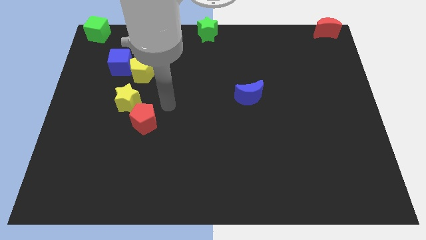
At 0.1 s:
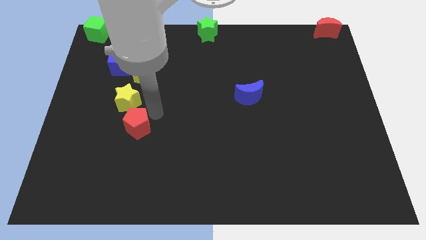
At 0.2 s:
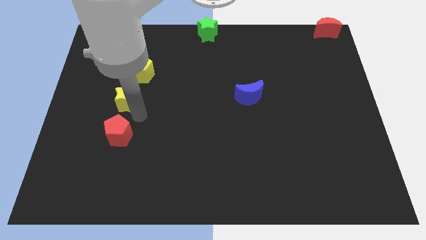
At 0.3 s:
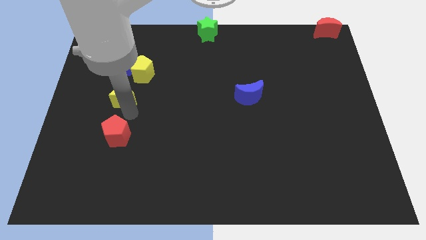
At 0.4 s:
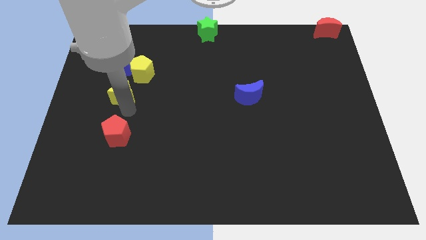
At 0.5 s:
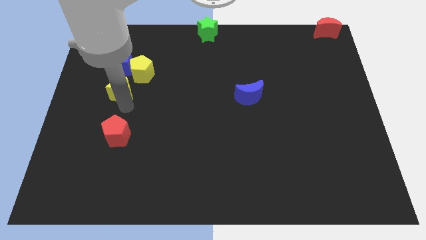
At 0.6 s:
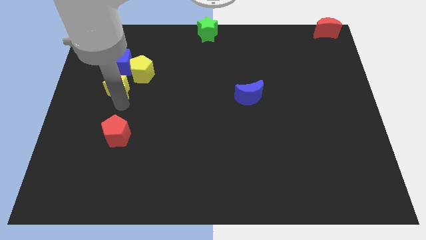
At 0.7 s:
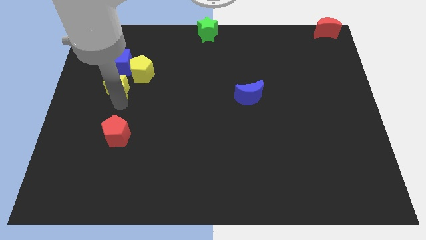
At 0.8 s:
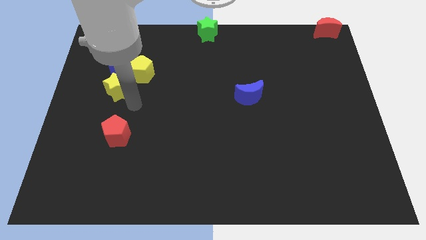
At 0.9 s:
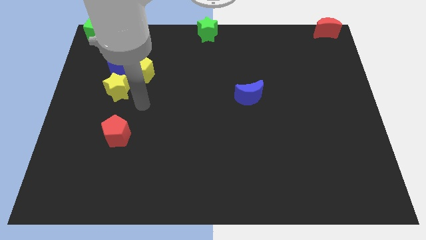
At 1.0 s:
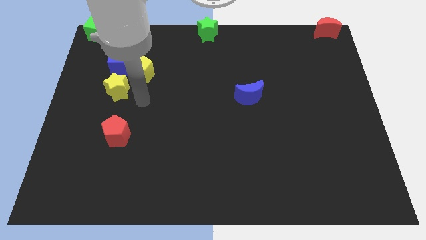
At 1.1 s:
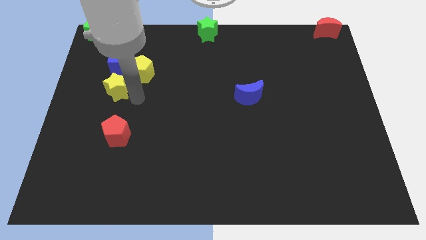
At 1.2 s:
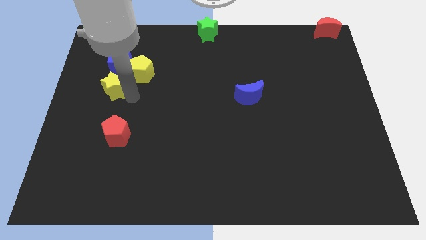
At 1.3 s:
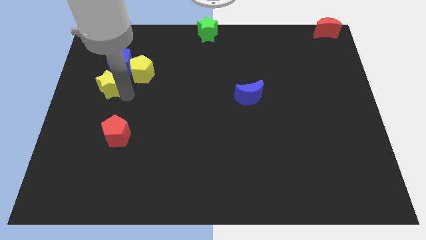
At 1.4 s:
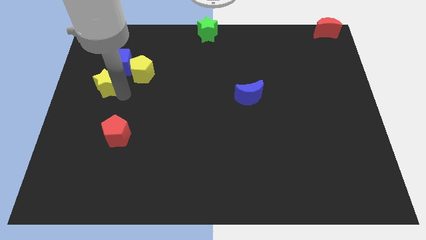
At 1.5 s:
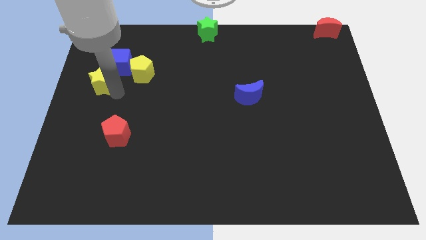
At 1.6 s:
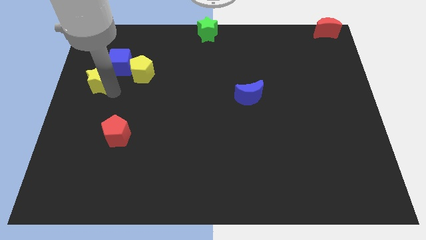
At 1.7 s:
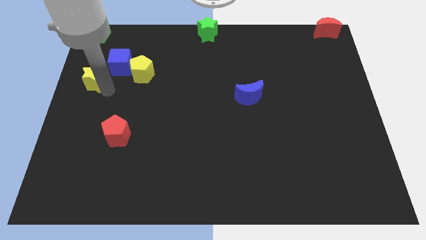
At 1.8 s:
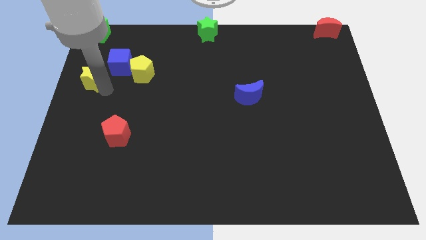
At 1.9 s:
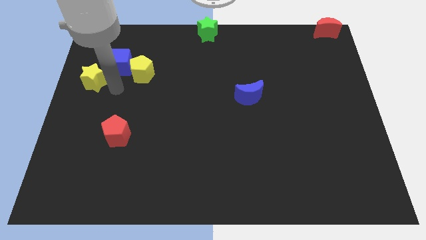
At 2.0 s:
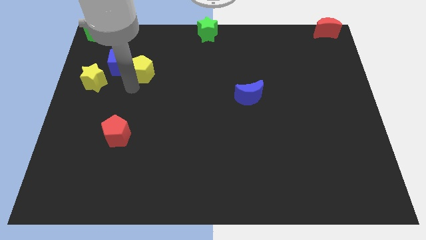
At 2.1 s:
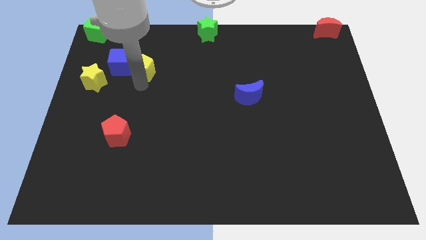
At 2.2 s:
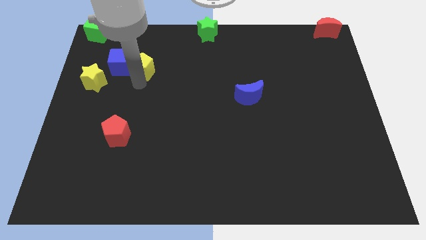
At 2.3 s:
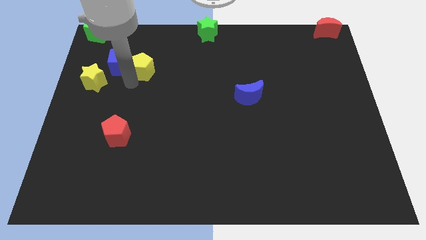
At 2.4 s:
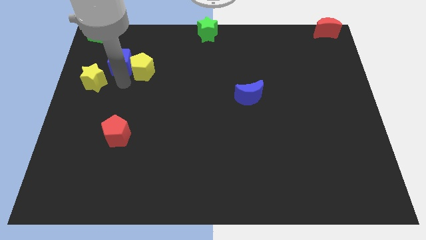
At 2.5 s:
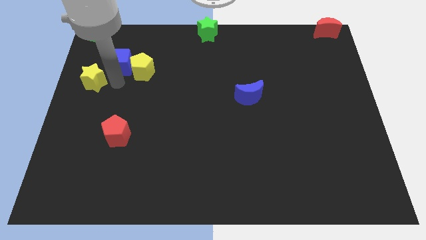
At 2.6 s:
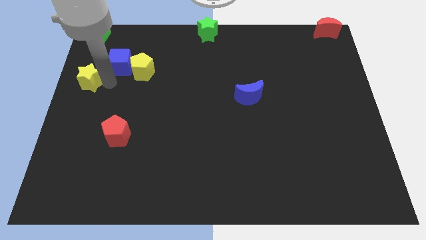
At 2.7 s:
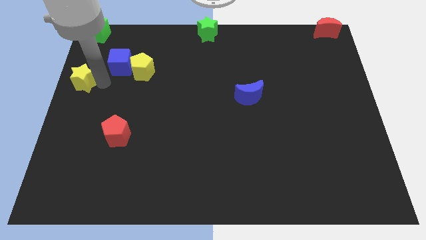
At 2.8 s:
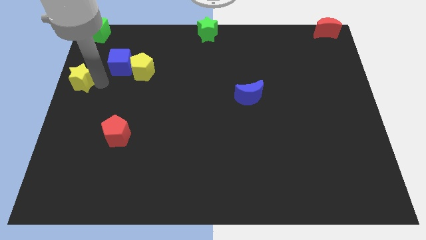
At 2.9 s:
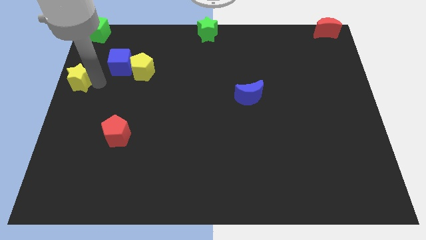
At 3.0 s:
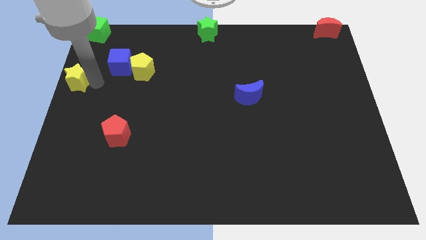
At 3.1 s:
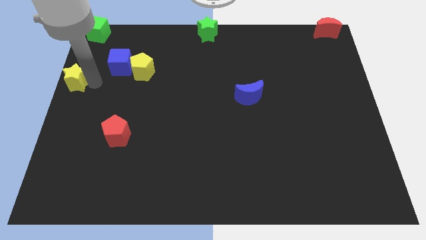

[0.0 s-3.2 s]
place yellow star below green cube

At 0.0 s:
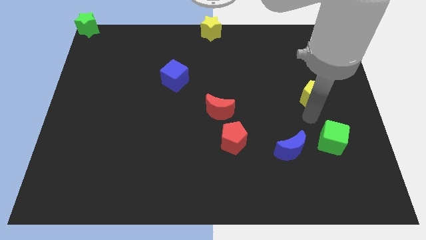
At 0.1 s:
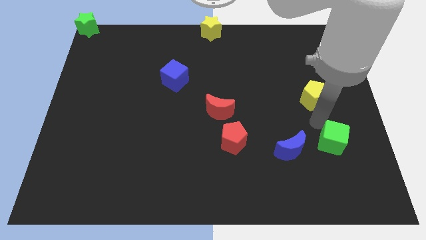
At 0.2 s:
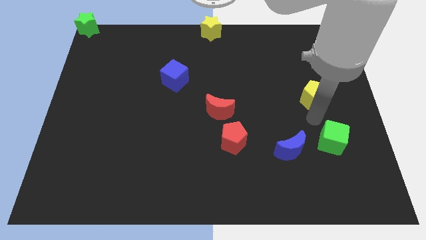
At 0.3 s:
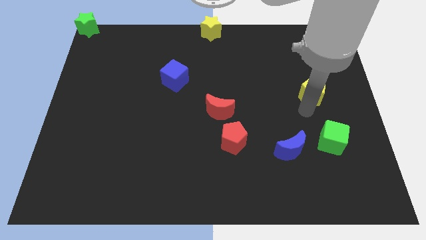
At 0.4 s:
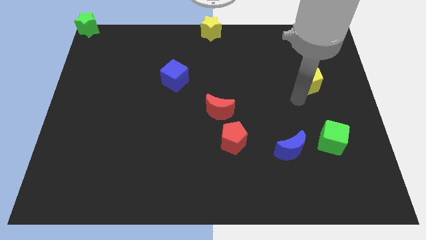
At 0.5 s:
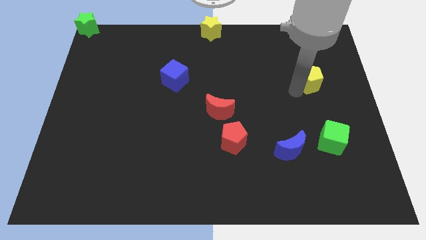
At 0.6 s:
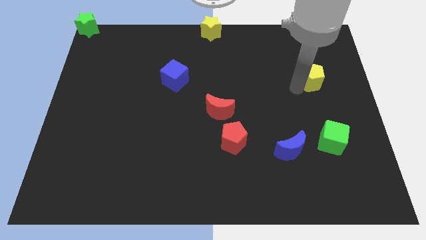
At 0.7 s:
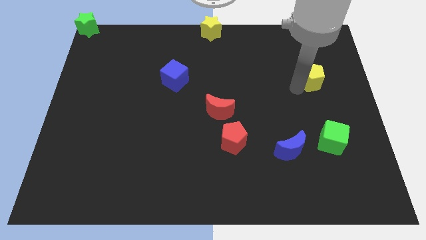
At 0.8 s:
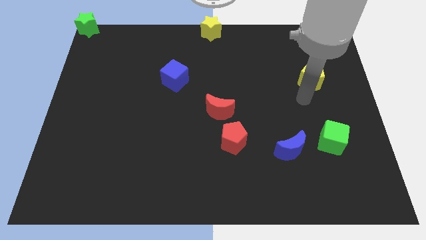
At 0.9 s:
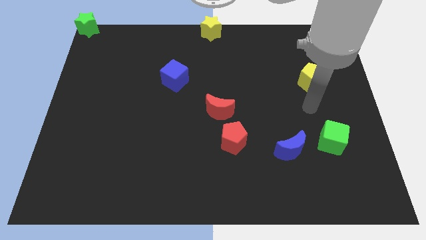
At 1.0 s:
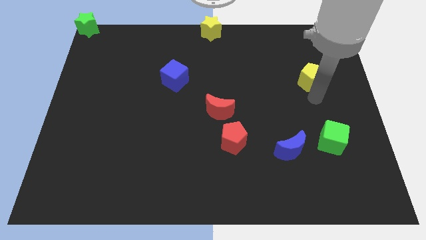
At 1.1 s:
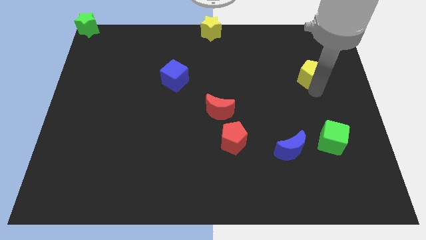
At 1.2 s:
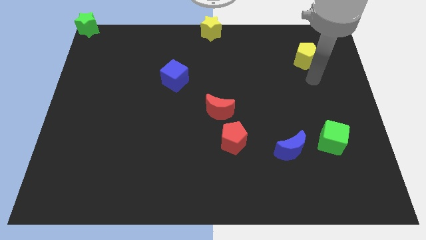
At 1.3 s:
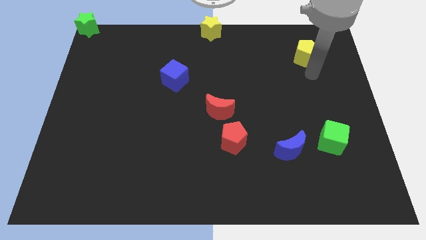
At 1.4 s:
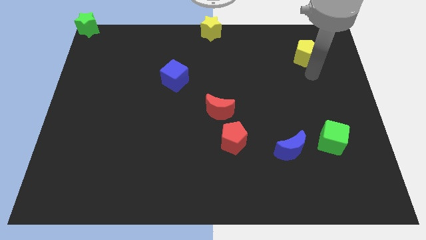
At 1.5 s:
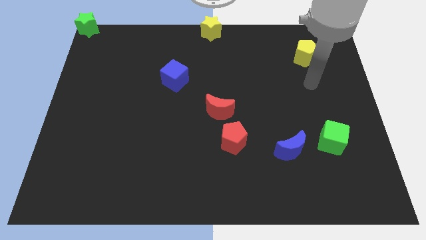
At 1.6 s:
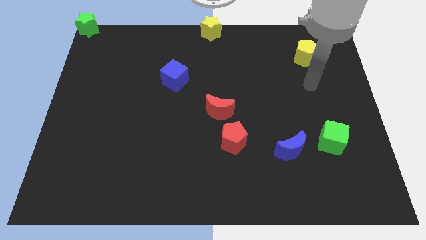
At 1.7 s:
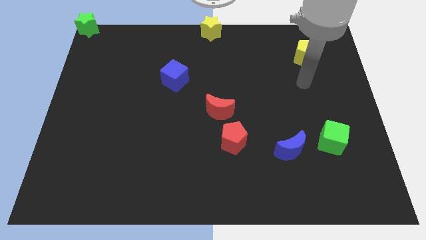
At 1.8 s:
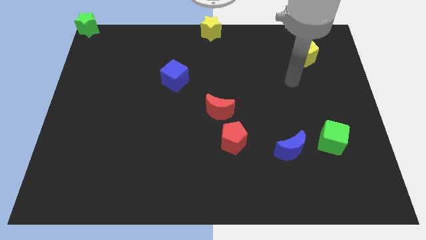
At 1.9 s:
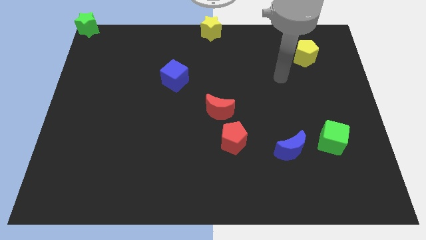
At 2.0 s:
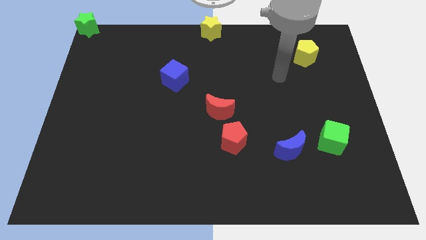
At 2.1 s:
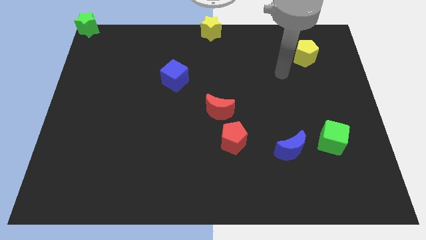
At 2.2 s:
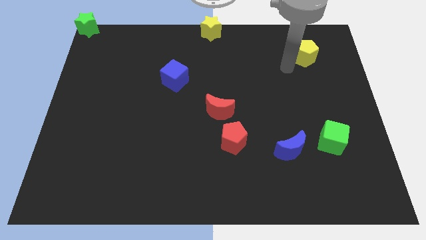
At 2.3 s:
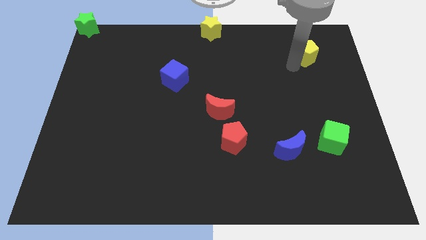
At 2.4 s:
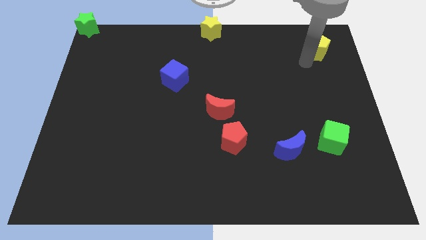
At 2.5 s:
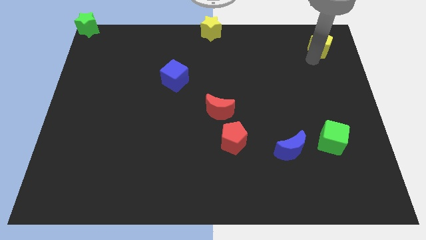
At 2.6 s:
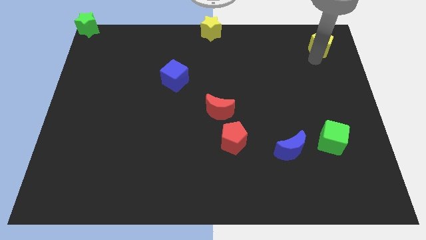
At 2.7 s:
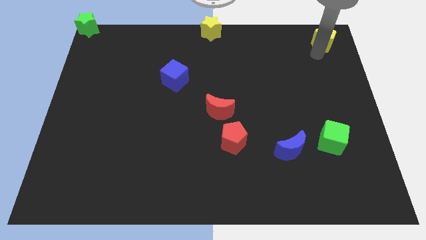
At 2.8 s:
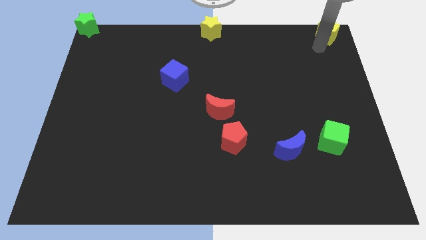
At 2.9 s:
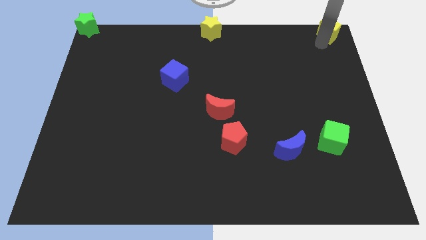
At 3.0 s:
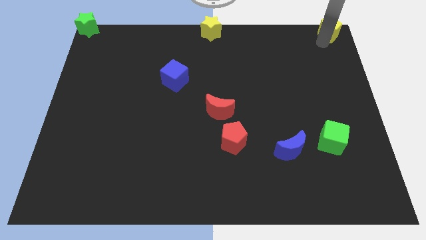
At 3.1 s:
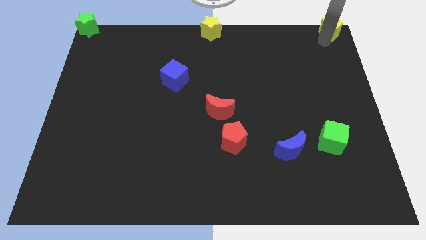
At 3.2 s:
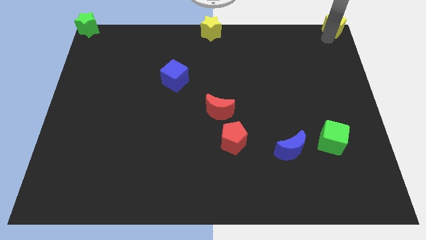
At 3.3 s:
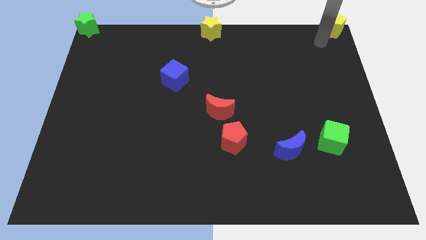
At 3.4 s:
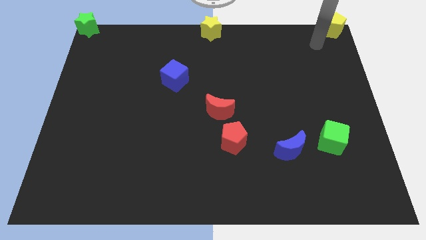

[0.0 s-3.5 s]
place the yellow pentagon at the top right corner of the board

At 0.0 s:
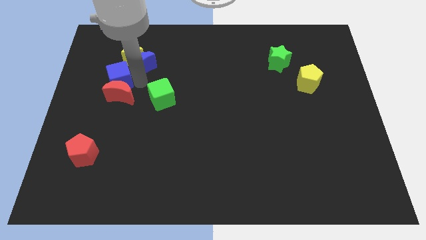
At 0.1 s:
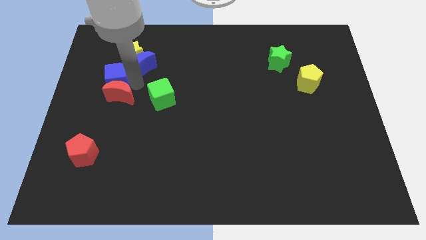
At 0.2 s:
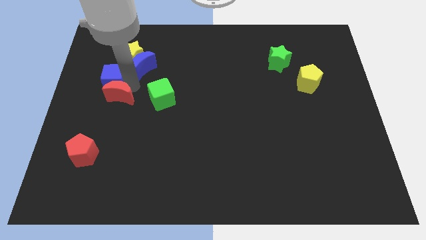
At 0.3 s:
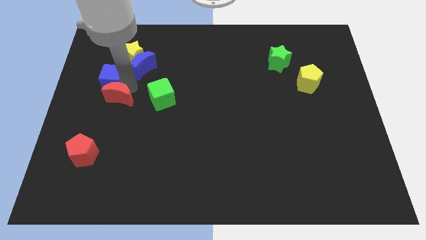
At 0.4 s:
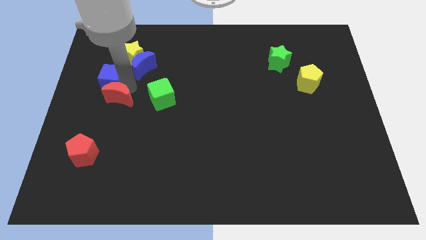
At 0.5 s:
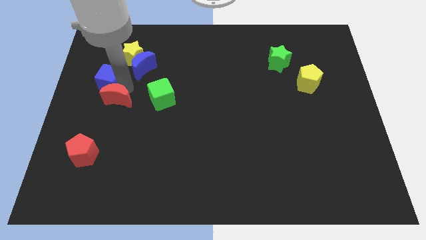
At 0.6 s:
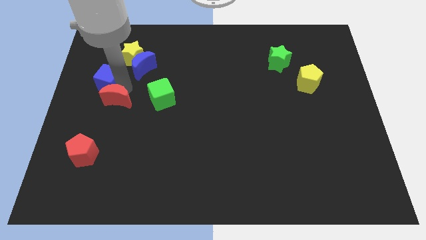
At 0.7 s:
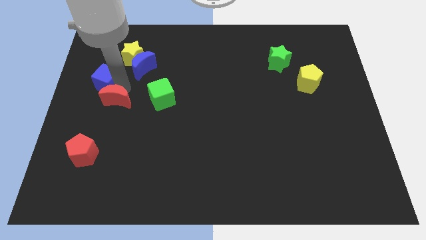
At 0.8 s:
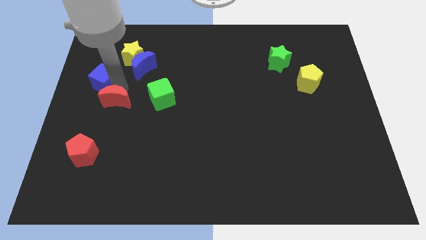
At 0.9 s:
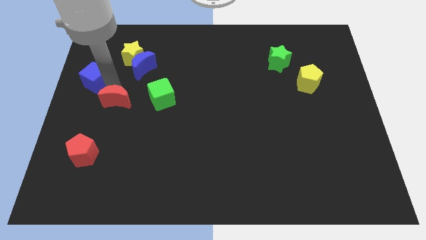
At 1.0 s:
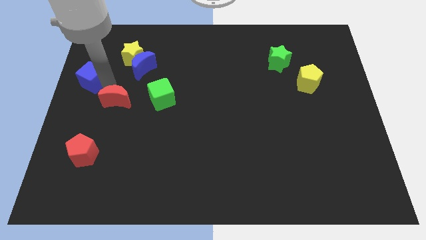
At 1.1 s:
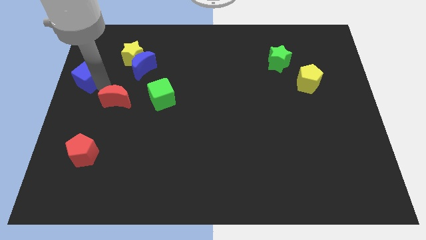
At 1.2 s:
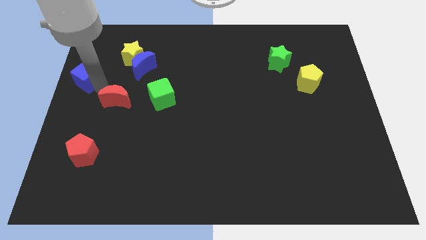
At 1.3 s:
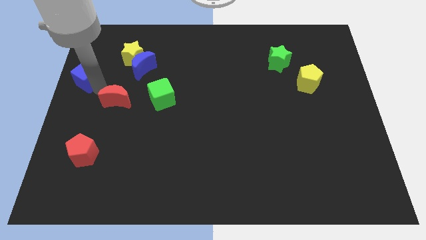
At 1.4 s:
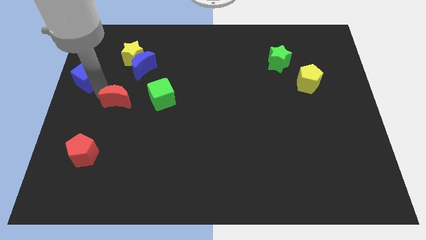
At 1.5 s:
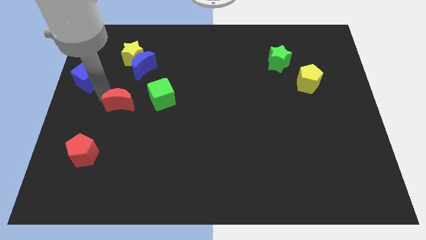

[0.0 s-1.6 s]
push blue cube slightly towards left

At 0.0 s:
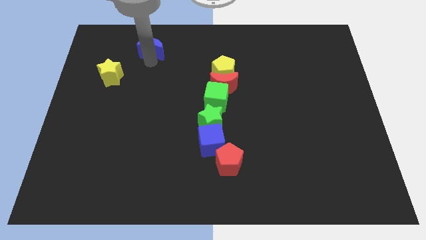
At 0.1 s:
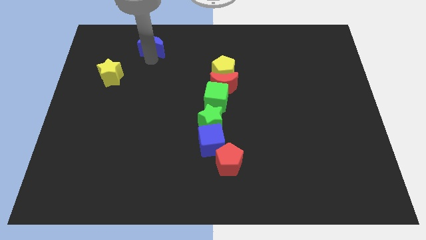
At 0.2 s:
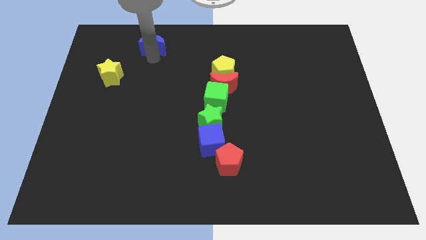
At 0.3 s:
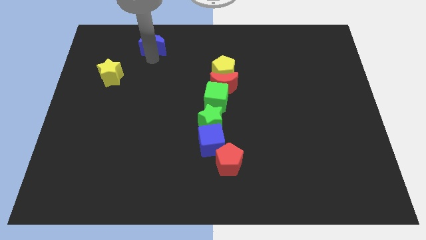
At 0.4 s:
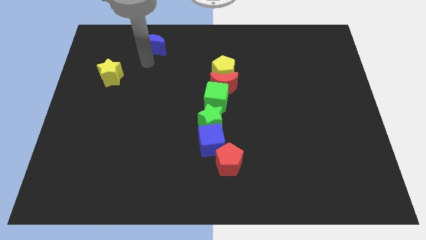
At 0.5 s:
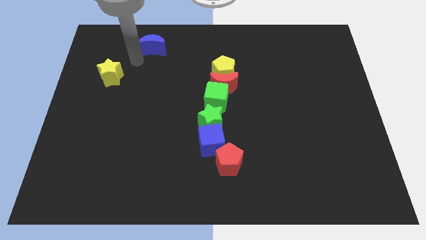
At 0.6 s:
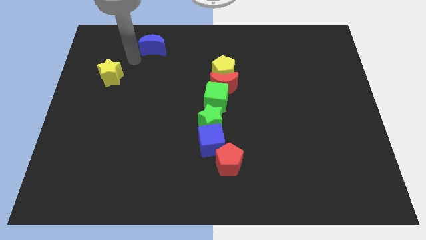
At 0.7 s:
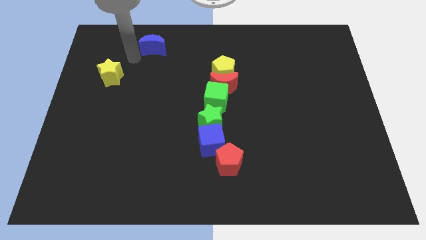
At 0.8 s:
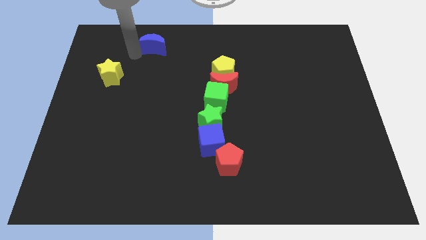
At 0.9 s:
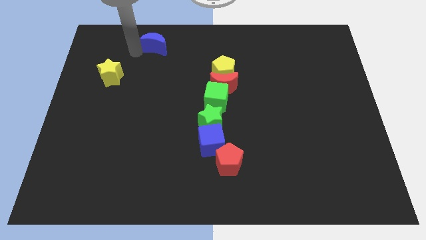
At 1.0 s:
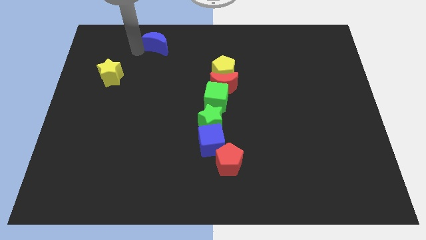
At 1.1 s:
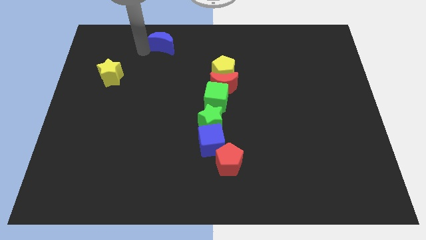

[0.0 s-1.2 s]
move blue moon slightly upwards
